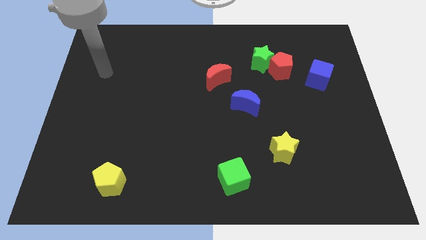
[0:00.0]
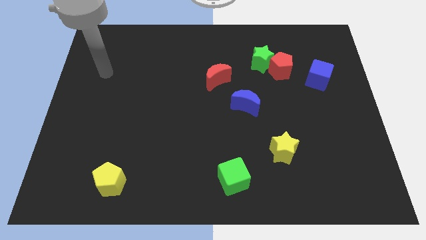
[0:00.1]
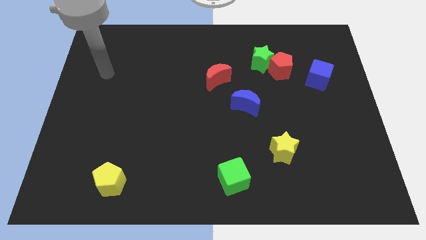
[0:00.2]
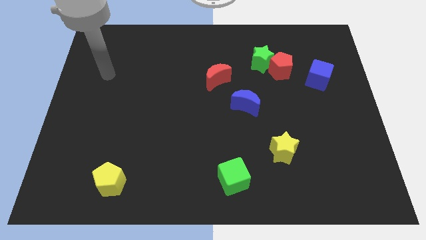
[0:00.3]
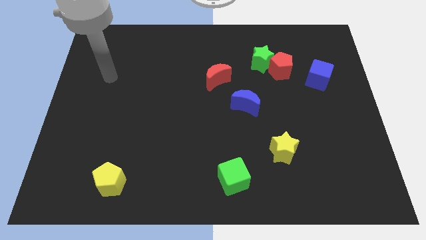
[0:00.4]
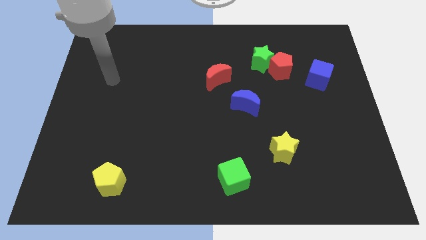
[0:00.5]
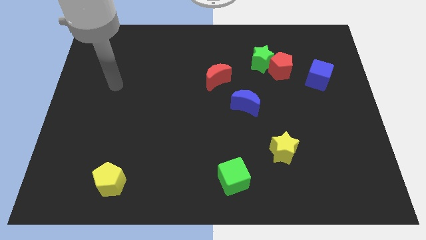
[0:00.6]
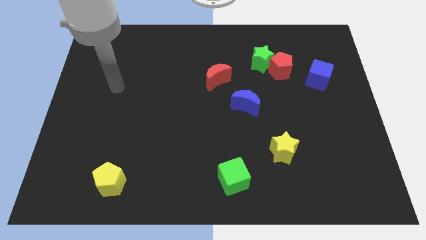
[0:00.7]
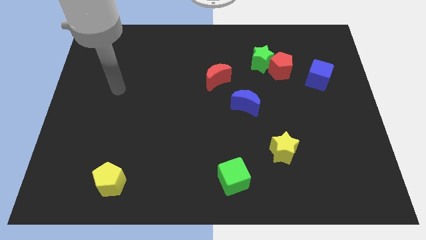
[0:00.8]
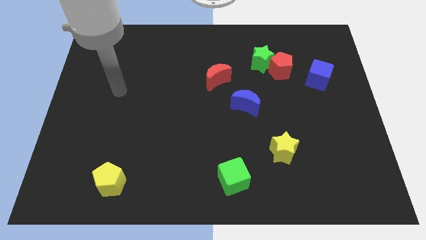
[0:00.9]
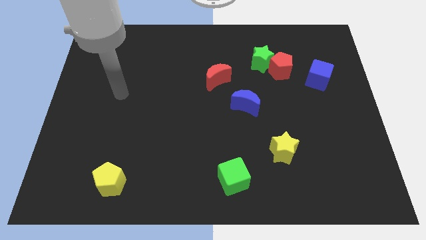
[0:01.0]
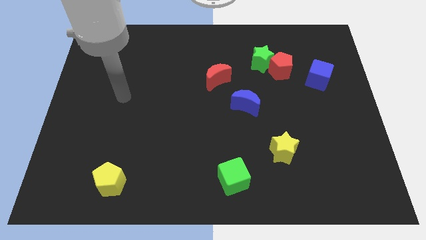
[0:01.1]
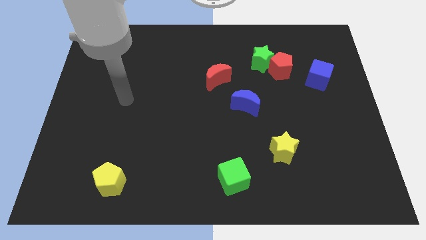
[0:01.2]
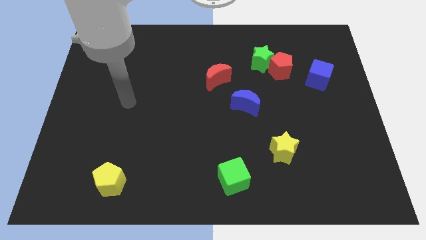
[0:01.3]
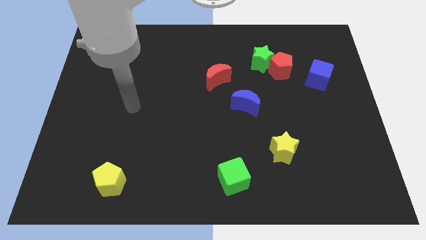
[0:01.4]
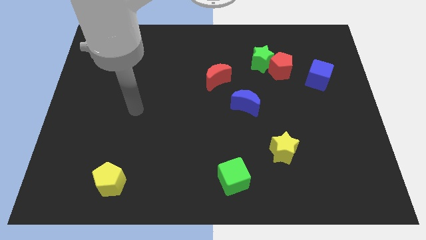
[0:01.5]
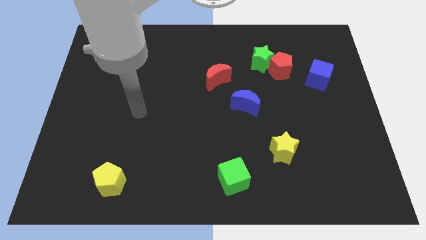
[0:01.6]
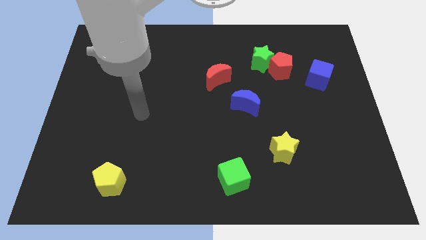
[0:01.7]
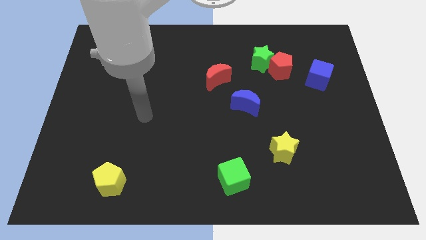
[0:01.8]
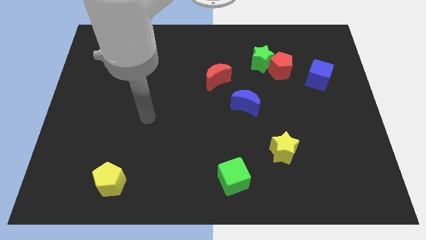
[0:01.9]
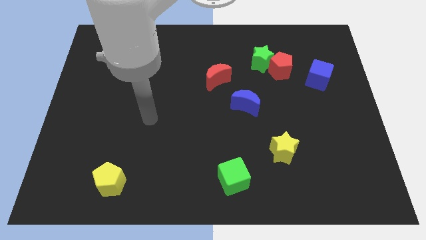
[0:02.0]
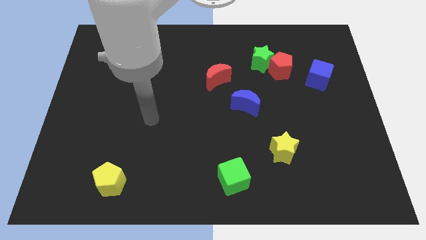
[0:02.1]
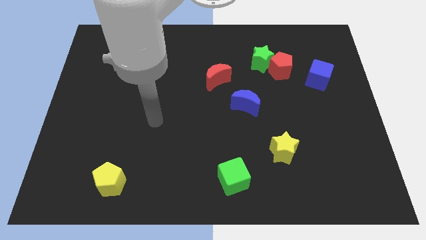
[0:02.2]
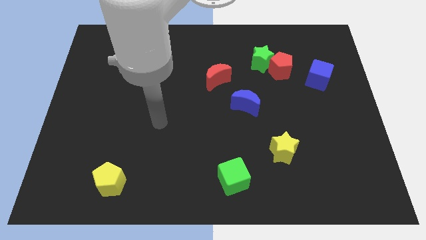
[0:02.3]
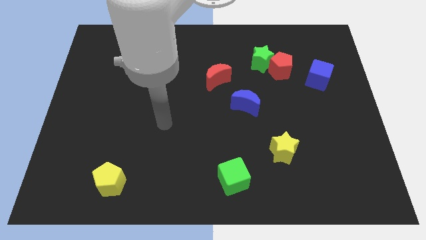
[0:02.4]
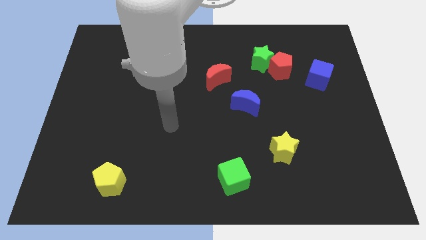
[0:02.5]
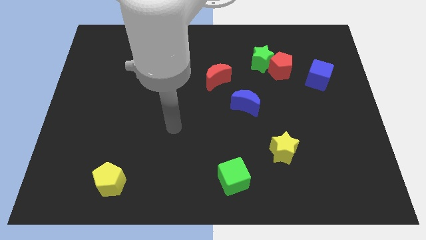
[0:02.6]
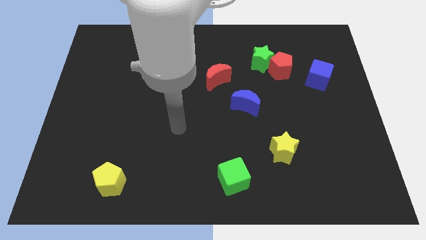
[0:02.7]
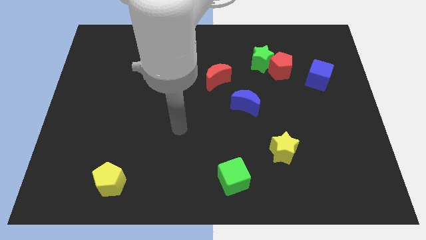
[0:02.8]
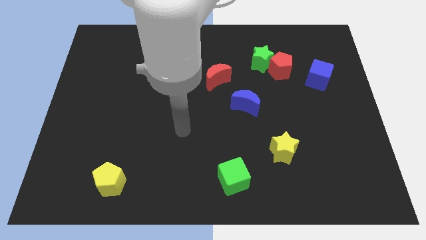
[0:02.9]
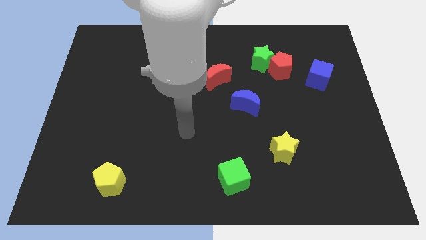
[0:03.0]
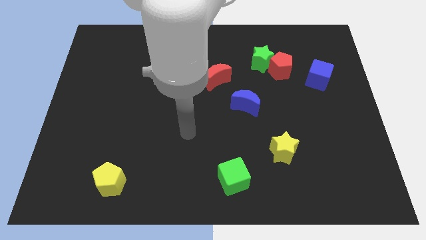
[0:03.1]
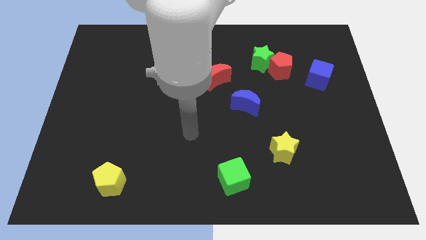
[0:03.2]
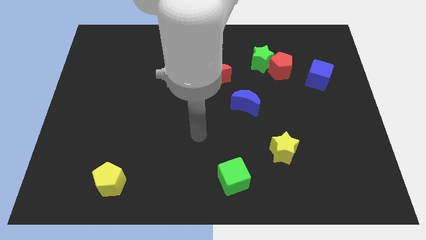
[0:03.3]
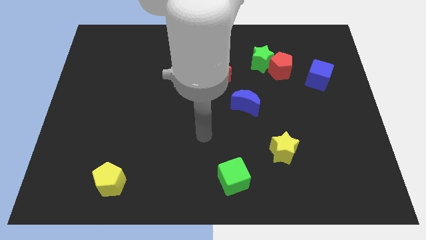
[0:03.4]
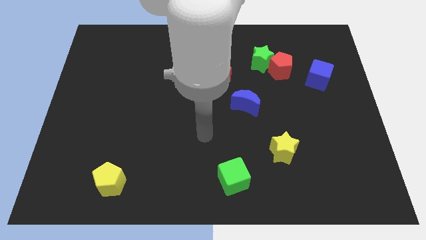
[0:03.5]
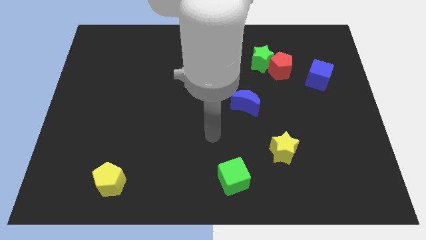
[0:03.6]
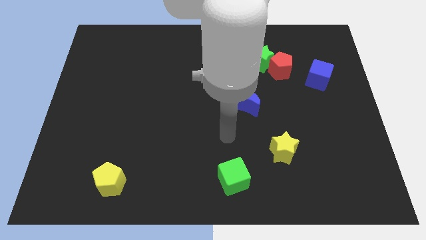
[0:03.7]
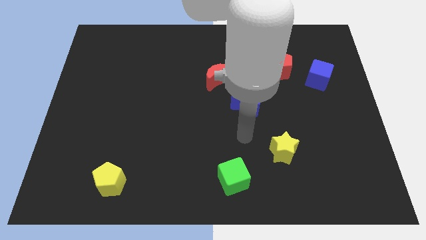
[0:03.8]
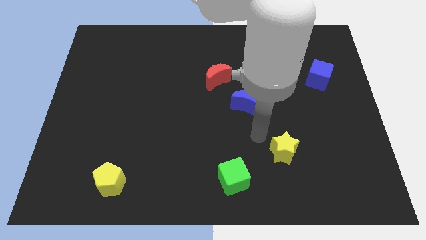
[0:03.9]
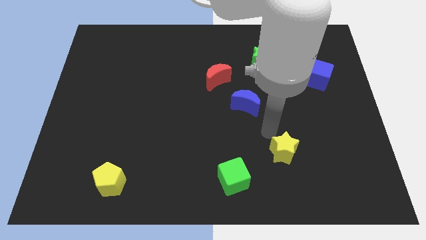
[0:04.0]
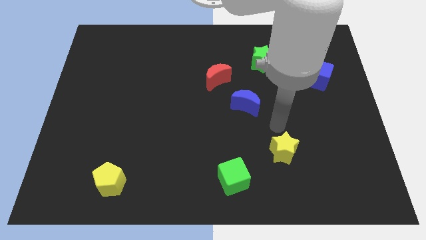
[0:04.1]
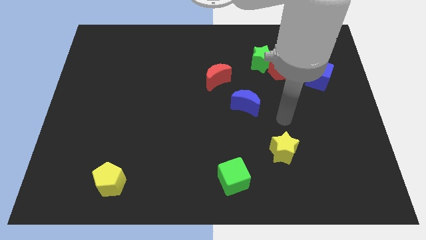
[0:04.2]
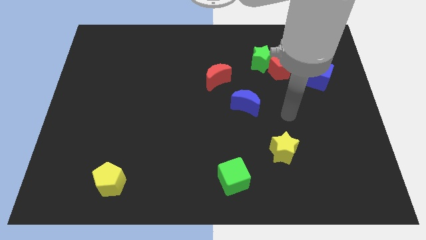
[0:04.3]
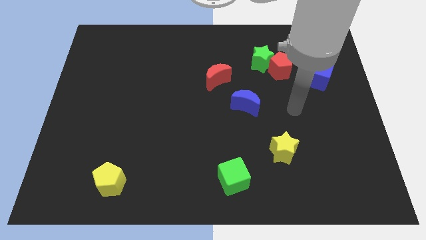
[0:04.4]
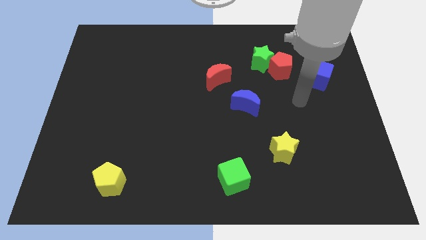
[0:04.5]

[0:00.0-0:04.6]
point your arm close the blue cube

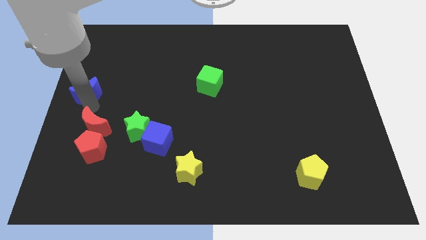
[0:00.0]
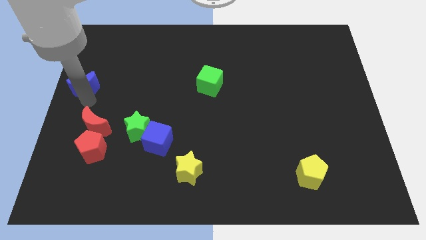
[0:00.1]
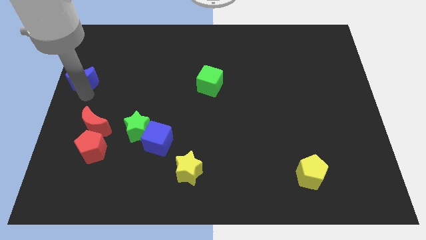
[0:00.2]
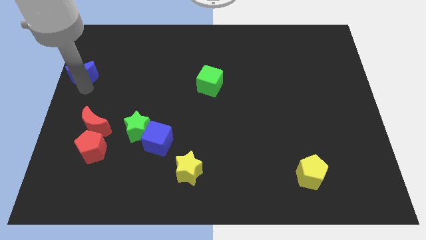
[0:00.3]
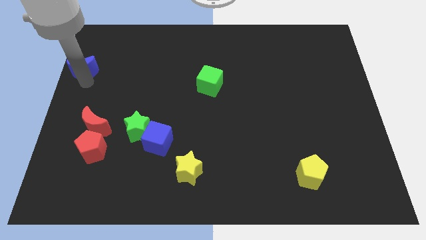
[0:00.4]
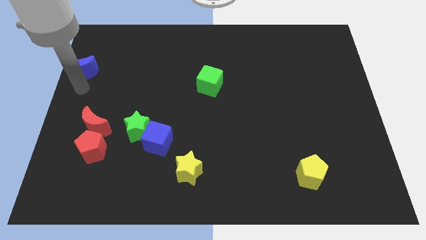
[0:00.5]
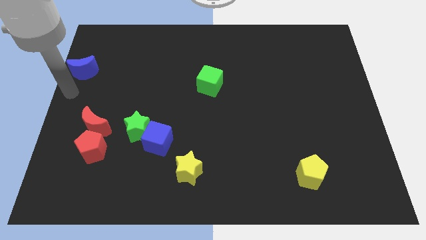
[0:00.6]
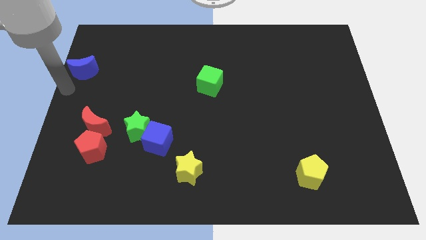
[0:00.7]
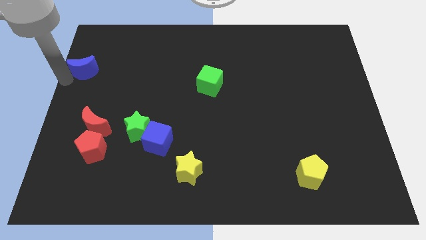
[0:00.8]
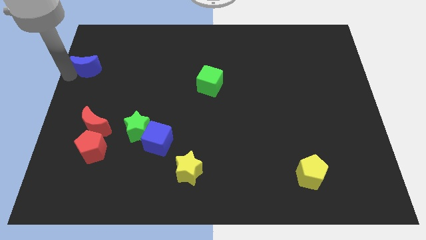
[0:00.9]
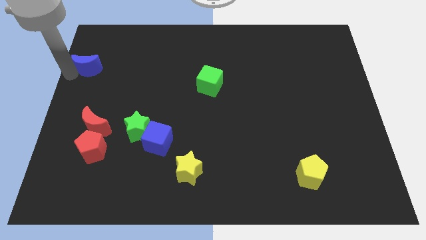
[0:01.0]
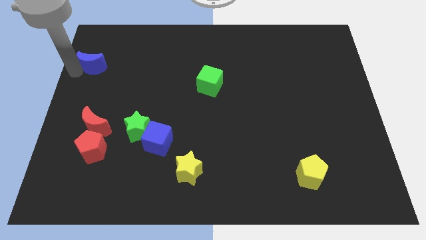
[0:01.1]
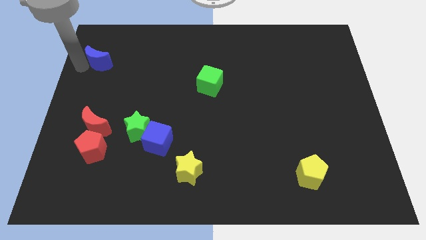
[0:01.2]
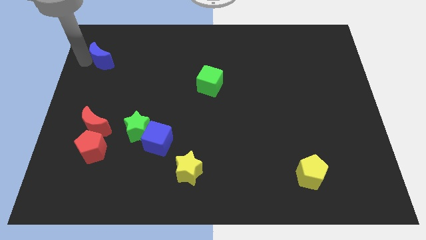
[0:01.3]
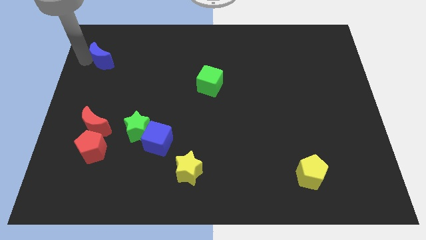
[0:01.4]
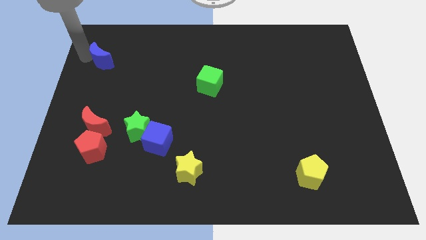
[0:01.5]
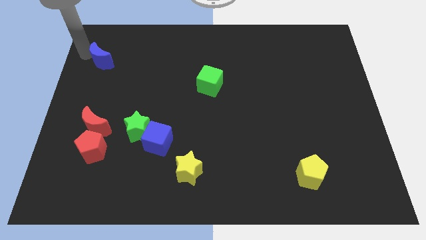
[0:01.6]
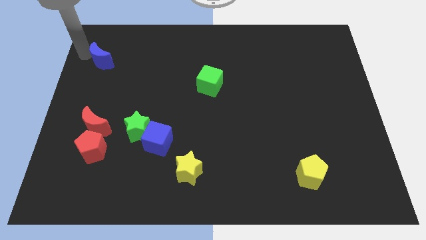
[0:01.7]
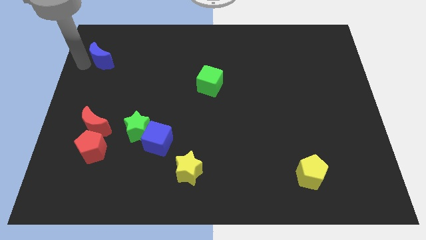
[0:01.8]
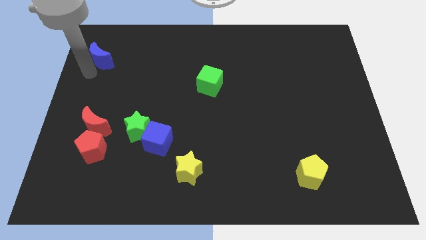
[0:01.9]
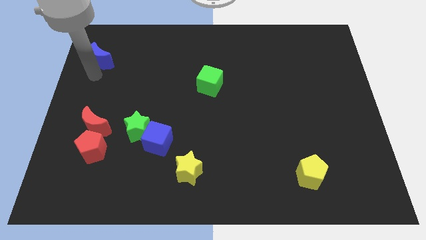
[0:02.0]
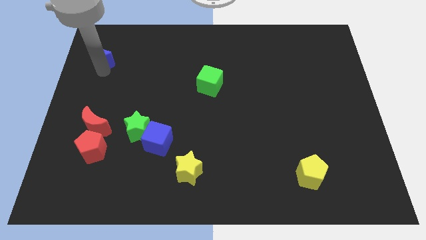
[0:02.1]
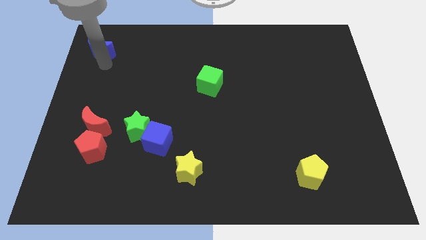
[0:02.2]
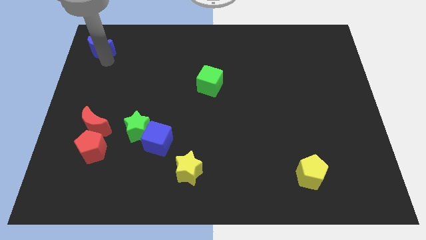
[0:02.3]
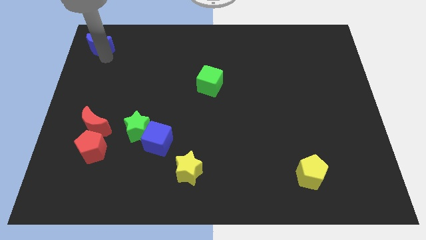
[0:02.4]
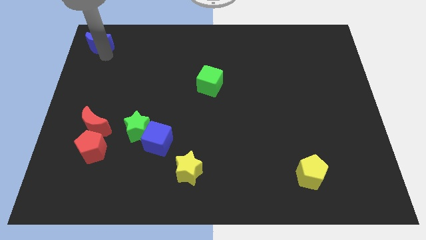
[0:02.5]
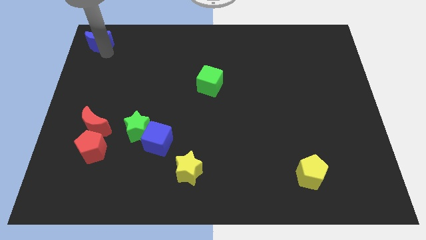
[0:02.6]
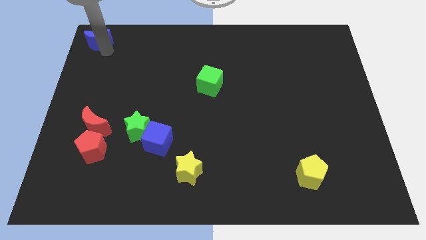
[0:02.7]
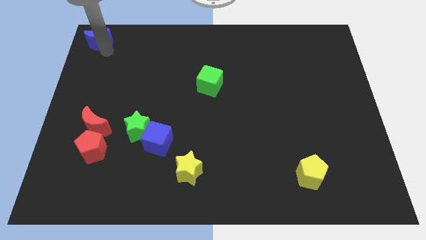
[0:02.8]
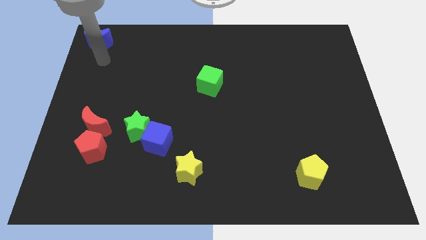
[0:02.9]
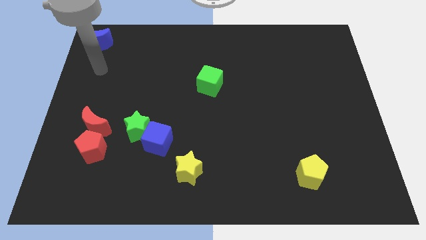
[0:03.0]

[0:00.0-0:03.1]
push blue moon to the top left

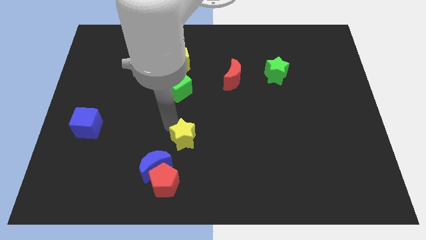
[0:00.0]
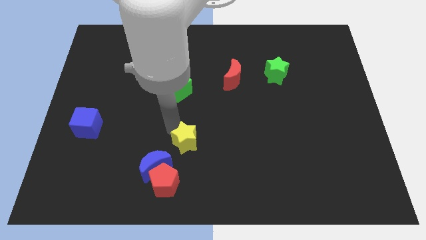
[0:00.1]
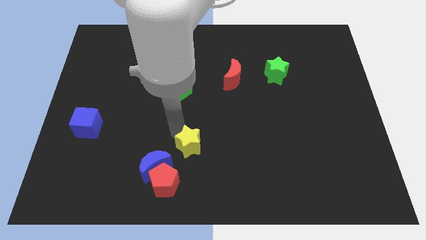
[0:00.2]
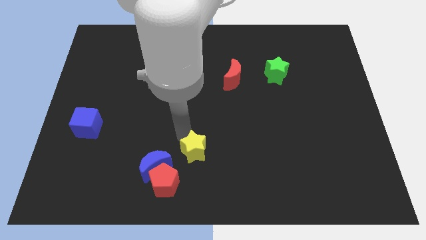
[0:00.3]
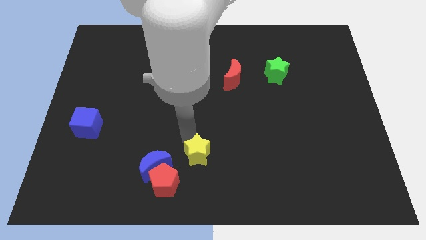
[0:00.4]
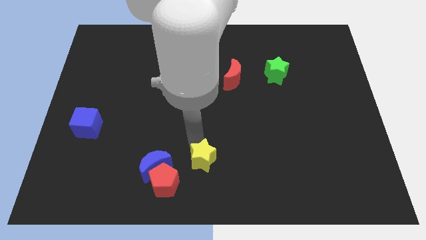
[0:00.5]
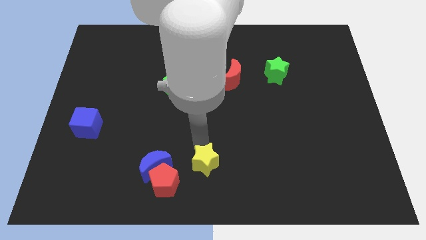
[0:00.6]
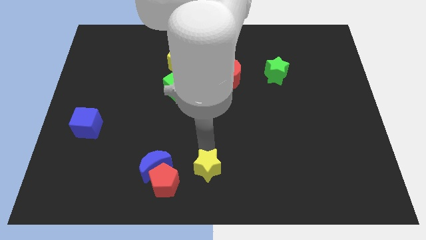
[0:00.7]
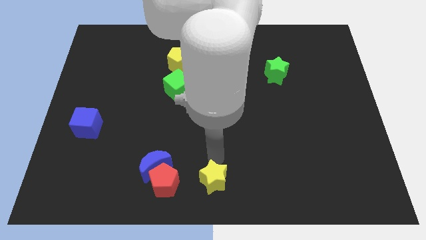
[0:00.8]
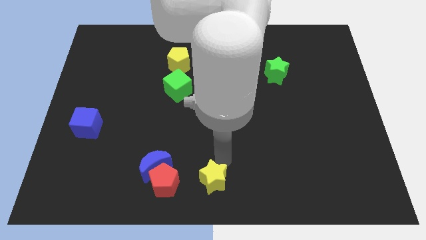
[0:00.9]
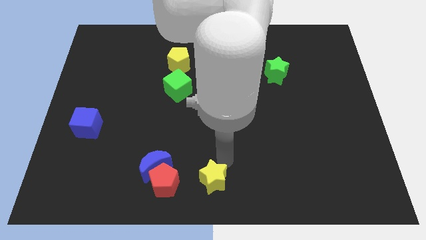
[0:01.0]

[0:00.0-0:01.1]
move yellow star towards bottom center

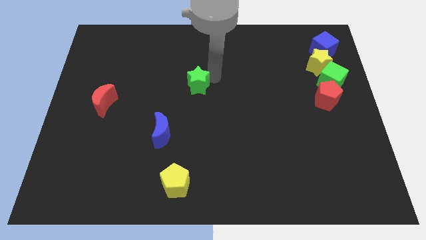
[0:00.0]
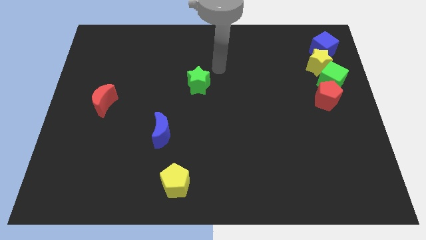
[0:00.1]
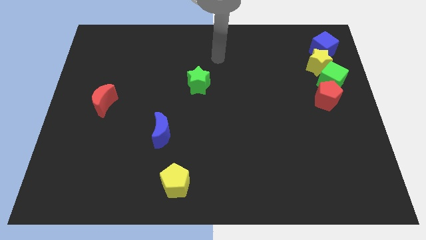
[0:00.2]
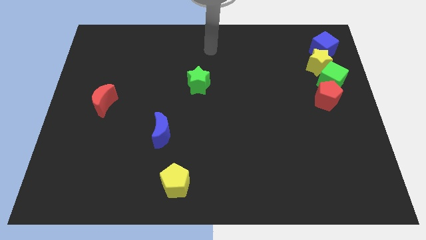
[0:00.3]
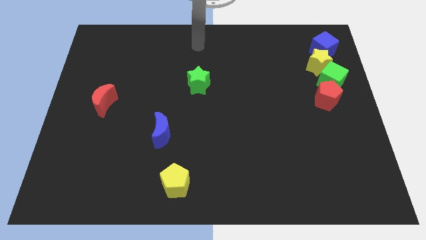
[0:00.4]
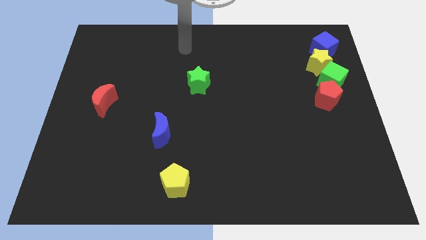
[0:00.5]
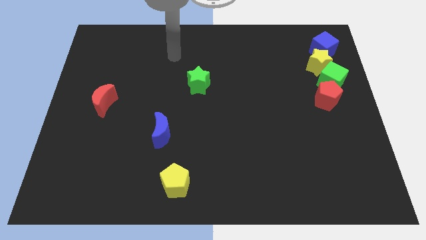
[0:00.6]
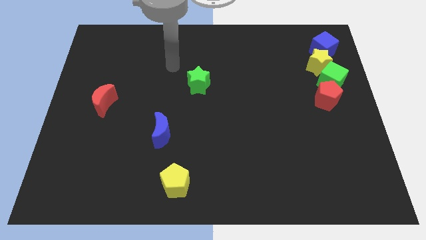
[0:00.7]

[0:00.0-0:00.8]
move your arm away from the green star
